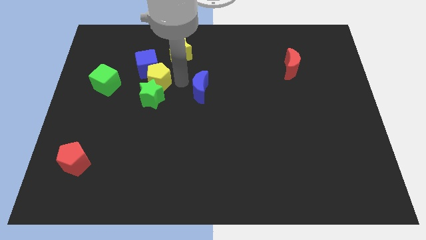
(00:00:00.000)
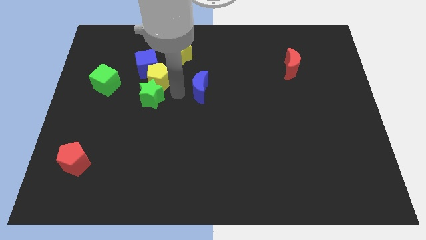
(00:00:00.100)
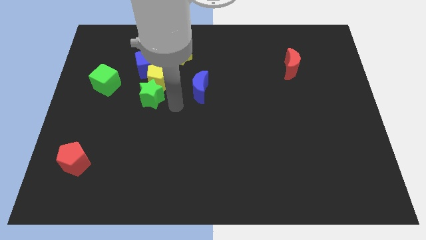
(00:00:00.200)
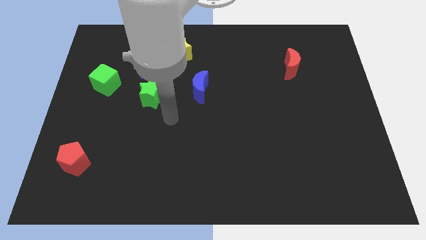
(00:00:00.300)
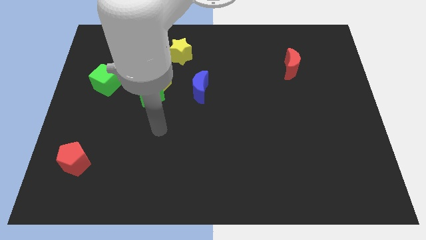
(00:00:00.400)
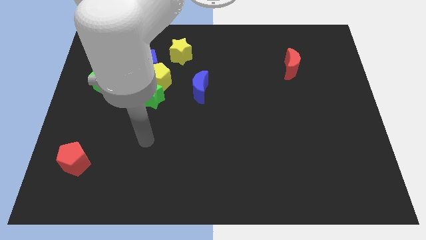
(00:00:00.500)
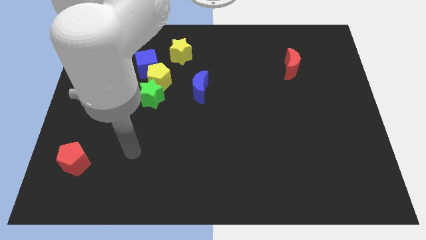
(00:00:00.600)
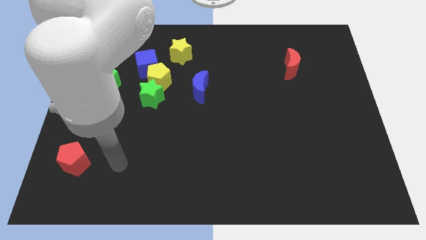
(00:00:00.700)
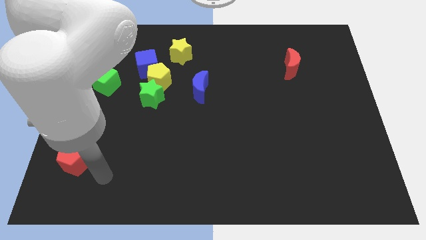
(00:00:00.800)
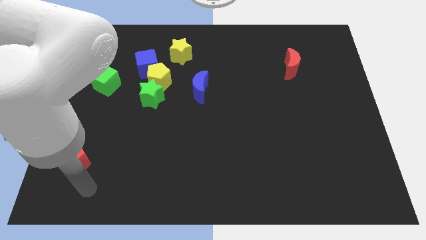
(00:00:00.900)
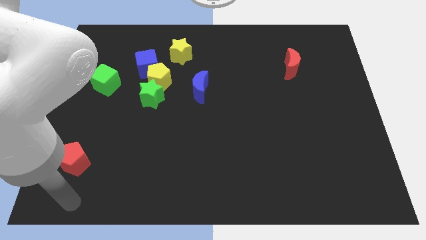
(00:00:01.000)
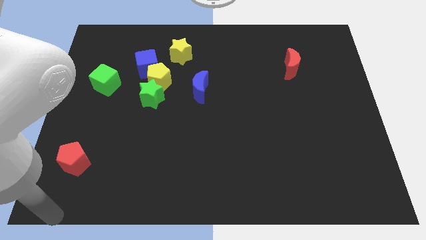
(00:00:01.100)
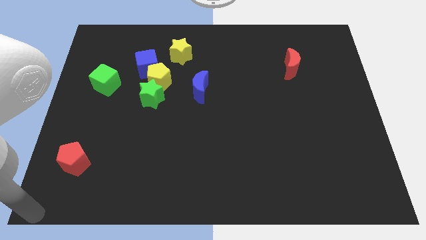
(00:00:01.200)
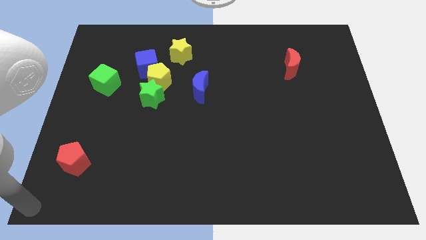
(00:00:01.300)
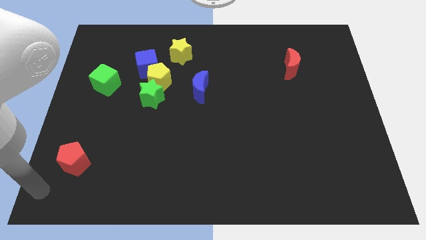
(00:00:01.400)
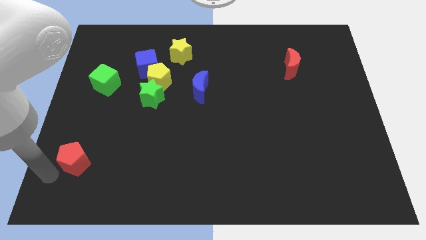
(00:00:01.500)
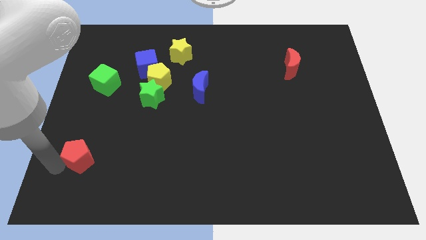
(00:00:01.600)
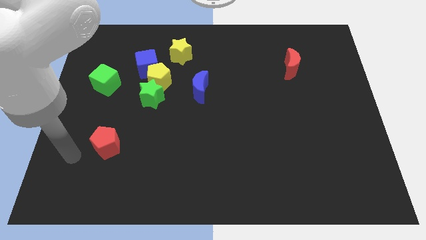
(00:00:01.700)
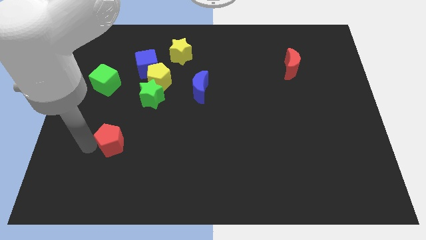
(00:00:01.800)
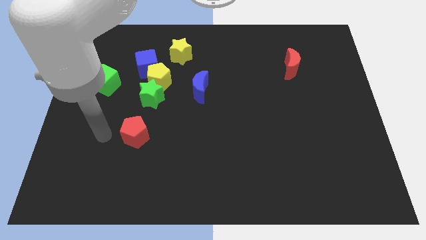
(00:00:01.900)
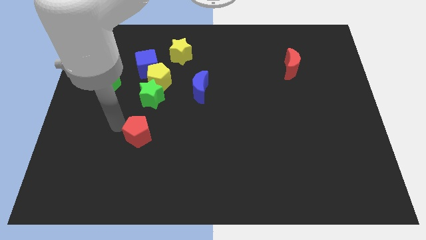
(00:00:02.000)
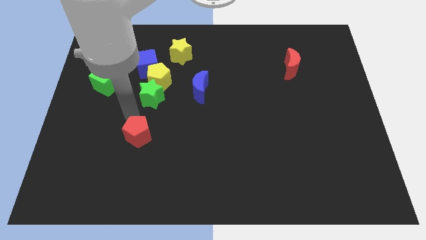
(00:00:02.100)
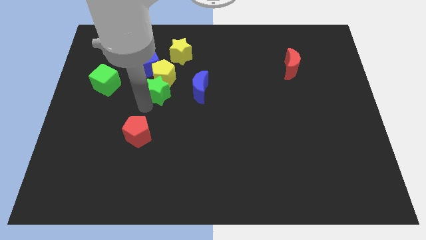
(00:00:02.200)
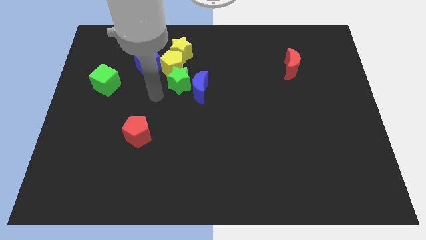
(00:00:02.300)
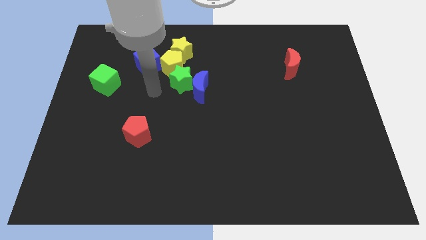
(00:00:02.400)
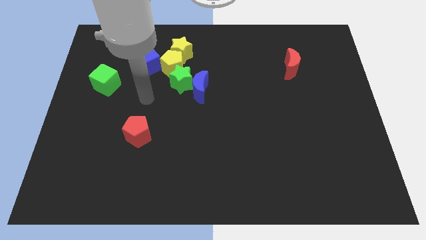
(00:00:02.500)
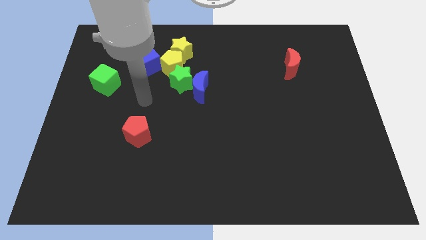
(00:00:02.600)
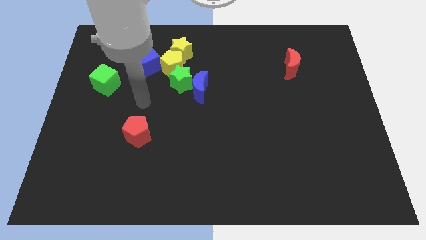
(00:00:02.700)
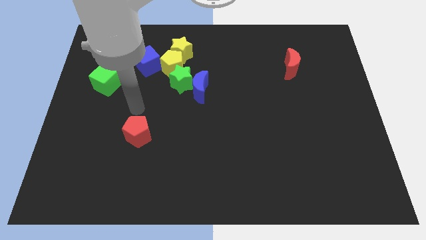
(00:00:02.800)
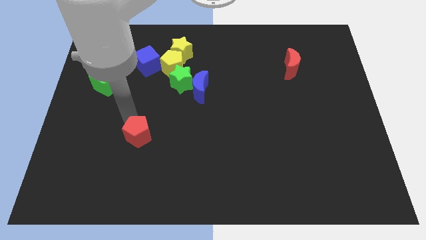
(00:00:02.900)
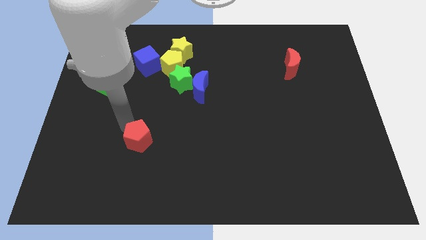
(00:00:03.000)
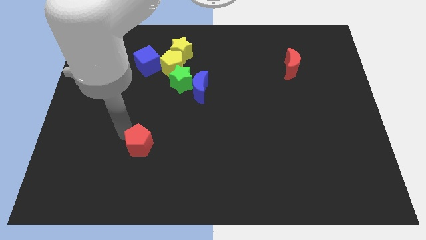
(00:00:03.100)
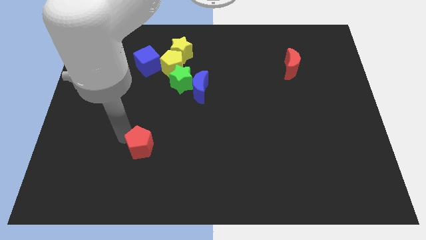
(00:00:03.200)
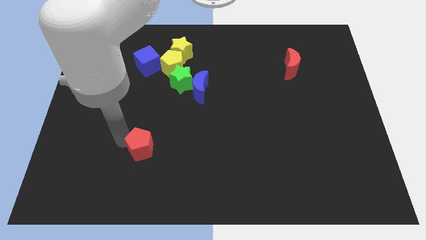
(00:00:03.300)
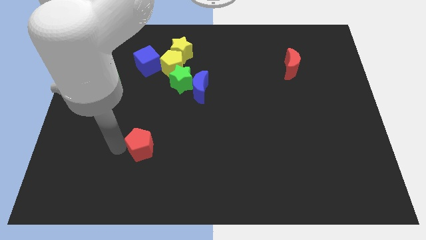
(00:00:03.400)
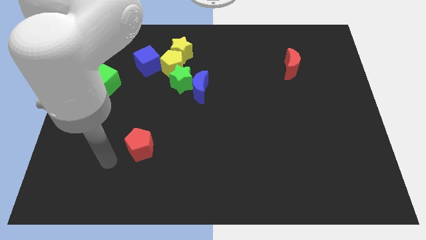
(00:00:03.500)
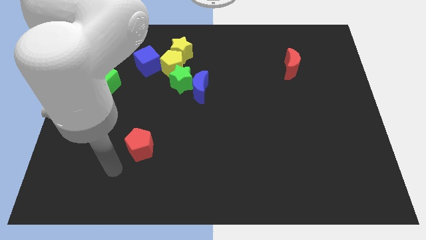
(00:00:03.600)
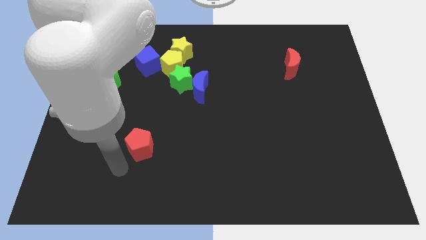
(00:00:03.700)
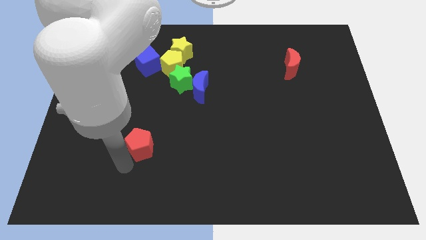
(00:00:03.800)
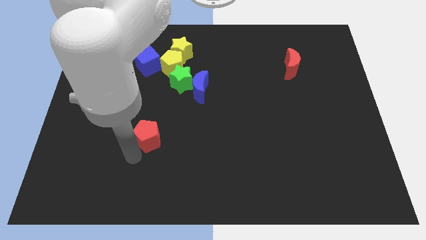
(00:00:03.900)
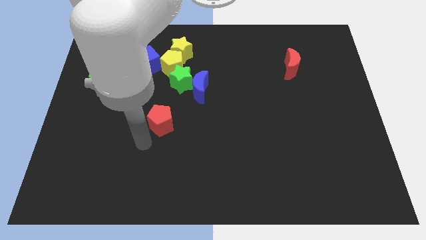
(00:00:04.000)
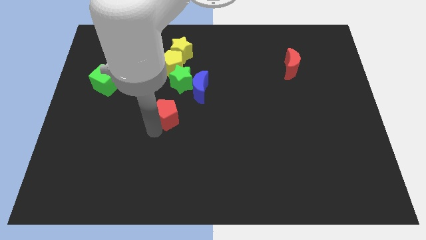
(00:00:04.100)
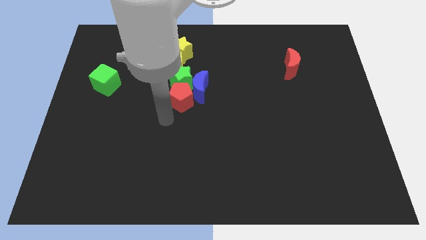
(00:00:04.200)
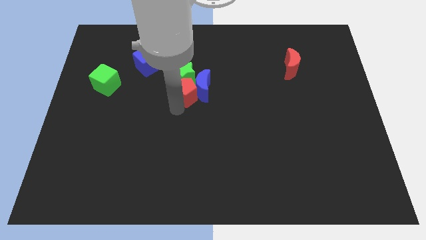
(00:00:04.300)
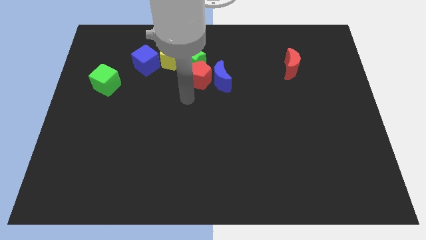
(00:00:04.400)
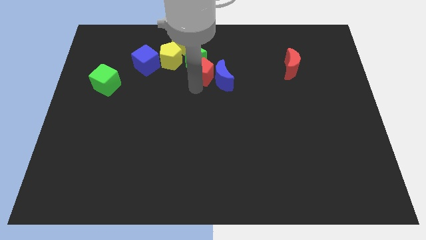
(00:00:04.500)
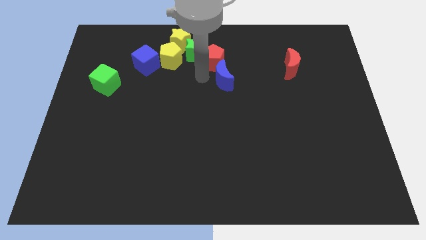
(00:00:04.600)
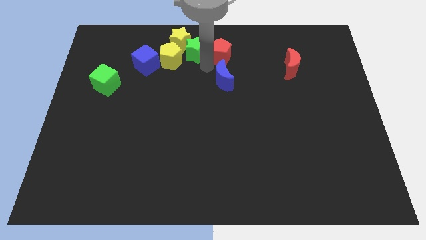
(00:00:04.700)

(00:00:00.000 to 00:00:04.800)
push the red pentagon to the right side of the green star

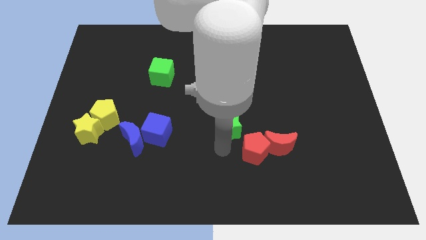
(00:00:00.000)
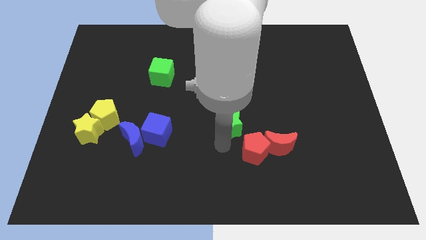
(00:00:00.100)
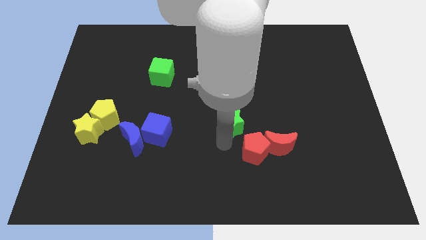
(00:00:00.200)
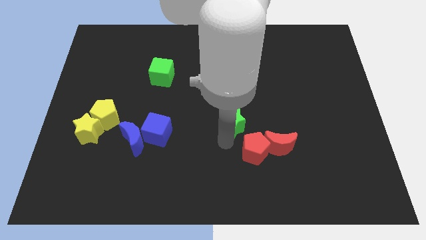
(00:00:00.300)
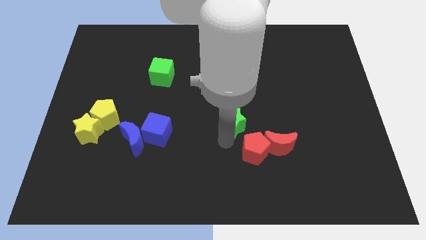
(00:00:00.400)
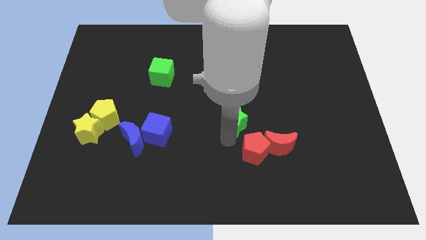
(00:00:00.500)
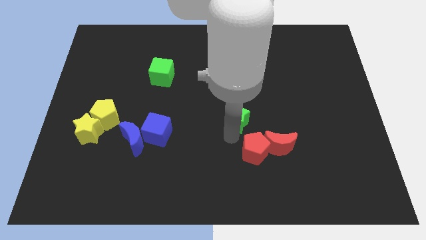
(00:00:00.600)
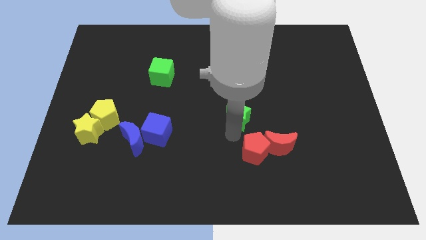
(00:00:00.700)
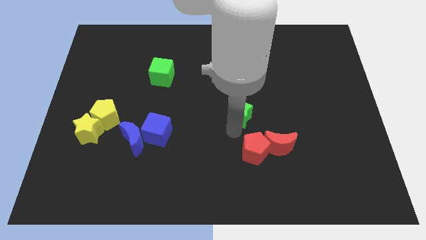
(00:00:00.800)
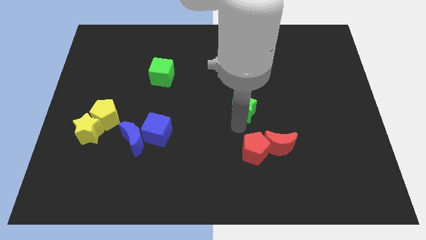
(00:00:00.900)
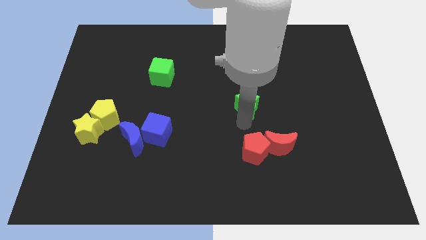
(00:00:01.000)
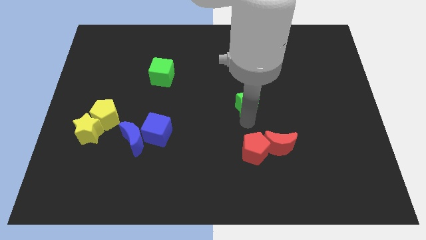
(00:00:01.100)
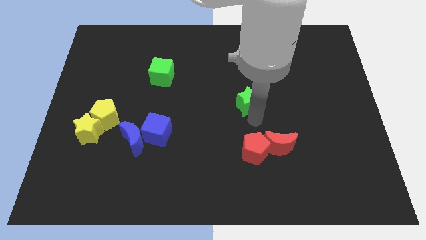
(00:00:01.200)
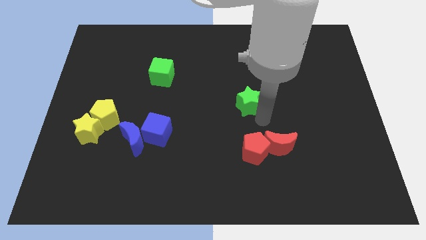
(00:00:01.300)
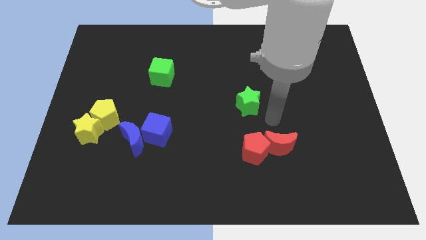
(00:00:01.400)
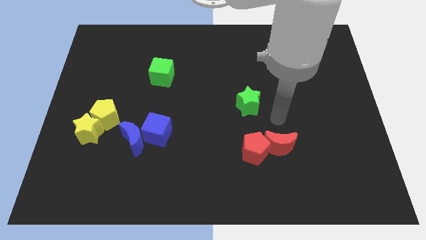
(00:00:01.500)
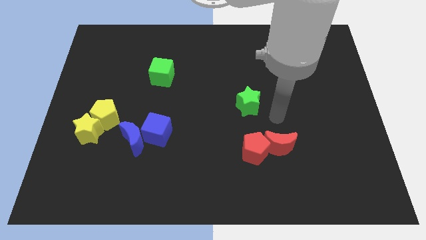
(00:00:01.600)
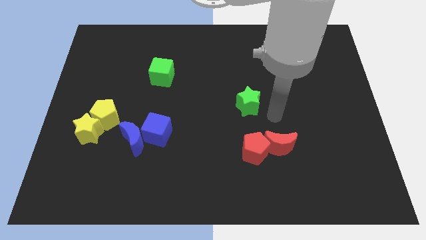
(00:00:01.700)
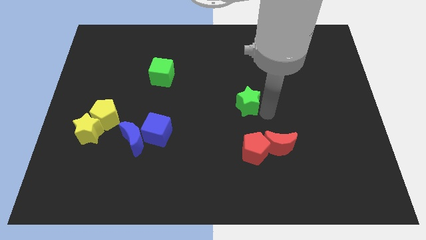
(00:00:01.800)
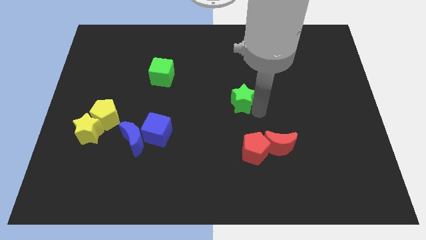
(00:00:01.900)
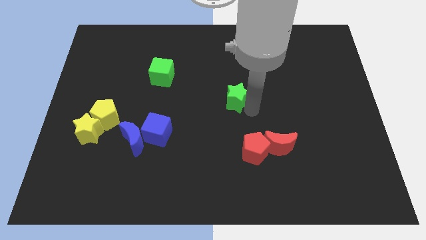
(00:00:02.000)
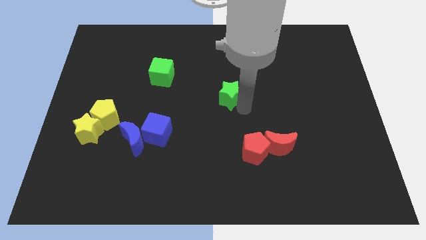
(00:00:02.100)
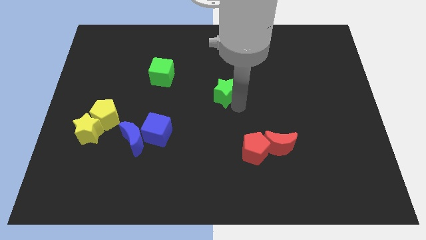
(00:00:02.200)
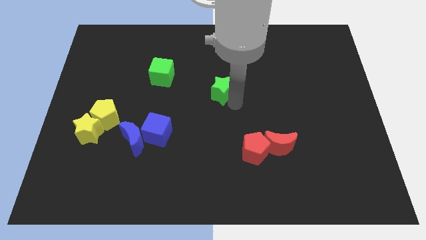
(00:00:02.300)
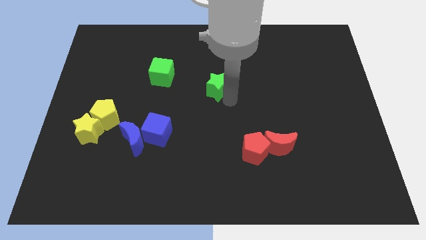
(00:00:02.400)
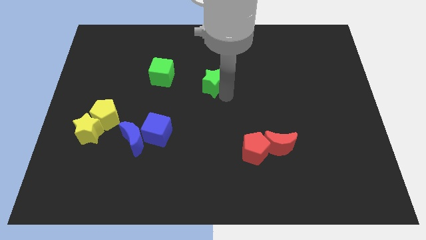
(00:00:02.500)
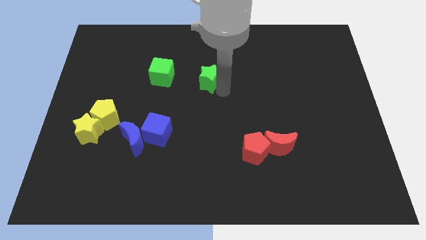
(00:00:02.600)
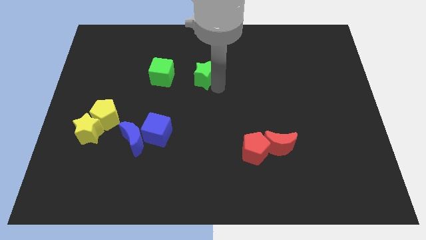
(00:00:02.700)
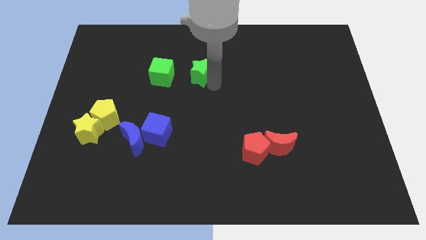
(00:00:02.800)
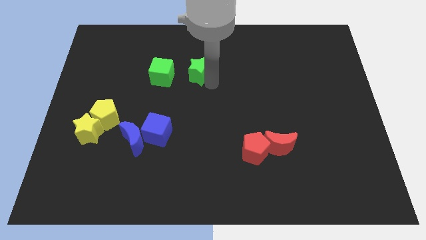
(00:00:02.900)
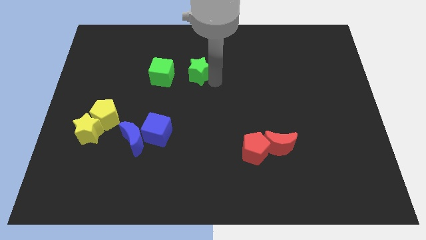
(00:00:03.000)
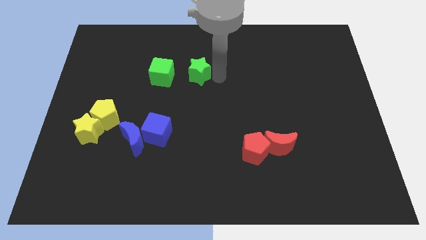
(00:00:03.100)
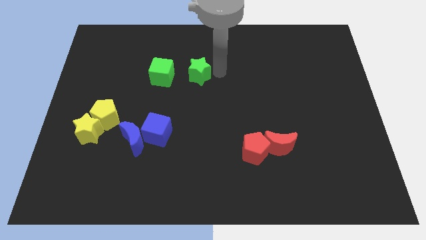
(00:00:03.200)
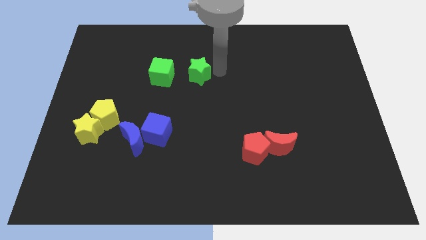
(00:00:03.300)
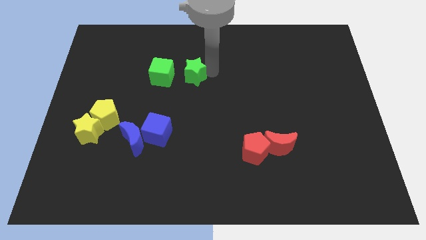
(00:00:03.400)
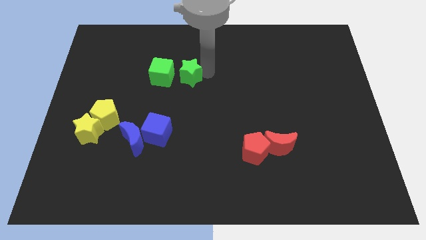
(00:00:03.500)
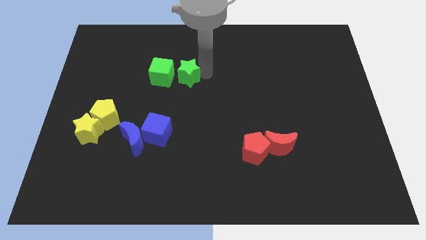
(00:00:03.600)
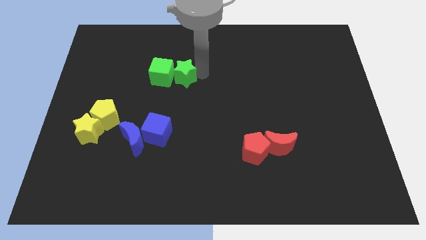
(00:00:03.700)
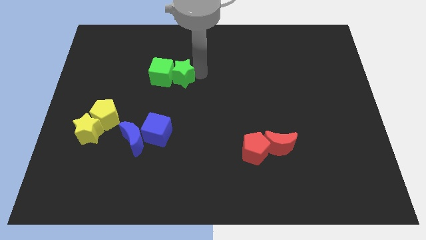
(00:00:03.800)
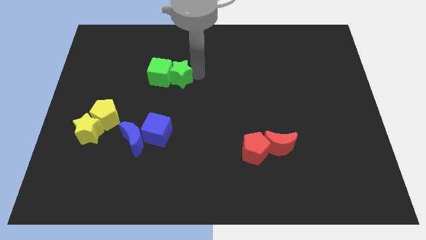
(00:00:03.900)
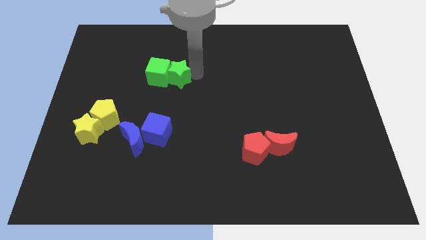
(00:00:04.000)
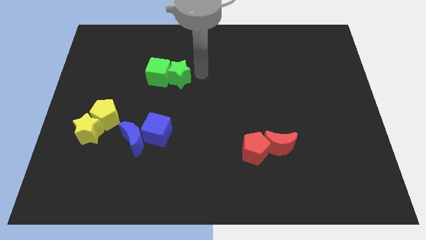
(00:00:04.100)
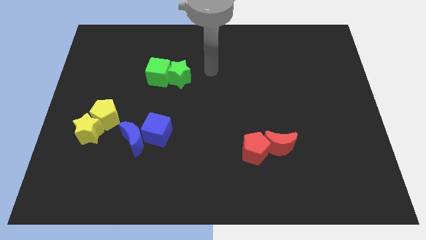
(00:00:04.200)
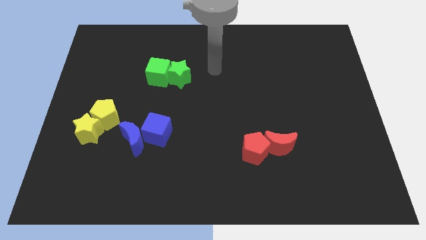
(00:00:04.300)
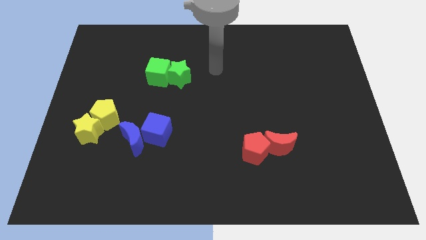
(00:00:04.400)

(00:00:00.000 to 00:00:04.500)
push green star into the green cube
